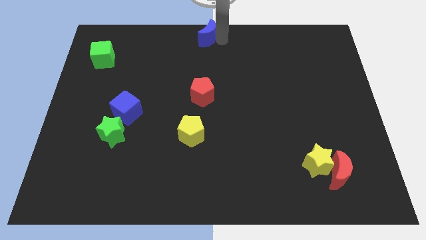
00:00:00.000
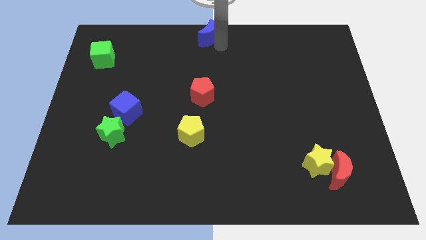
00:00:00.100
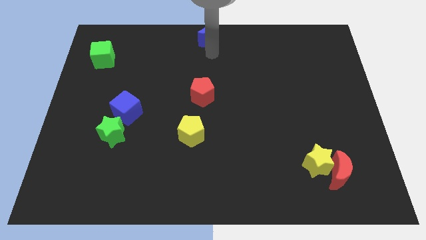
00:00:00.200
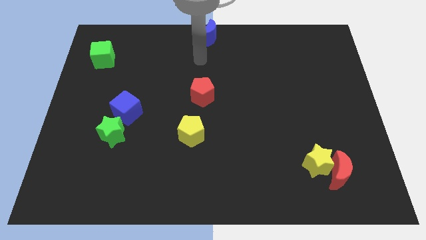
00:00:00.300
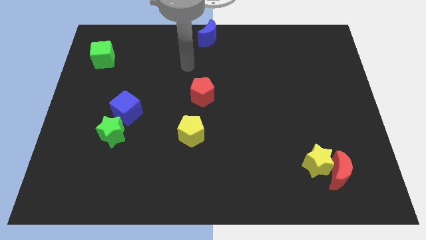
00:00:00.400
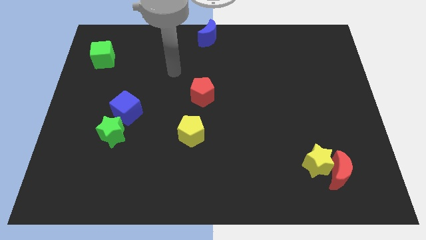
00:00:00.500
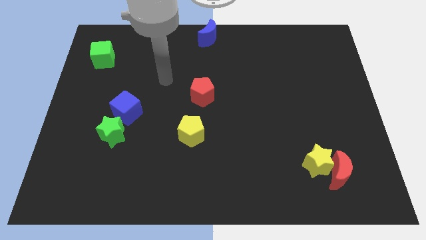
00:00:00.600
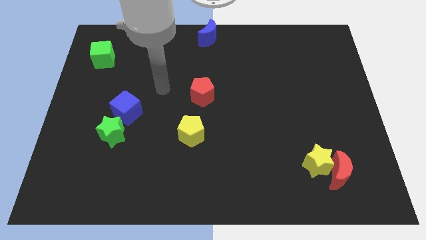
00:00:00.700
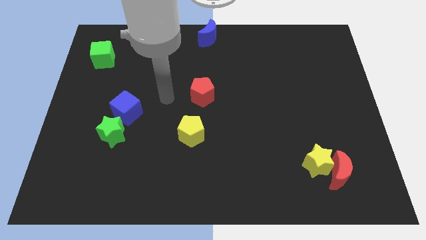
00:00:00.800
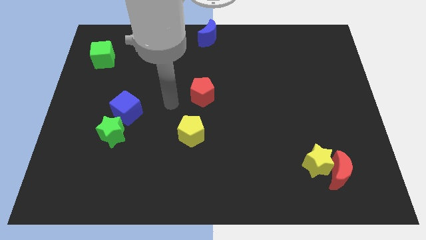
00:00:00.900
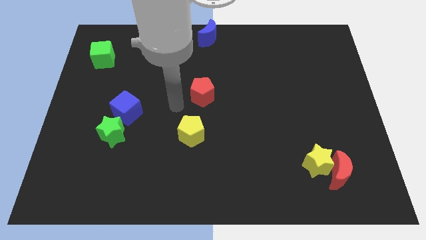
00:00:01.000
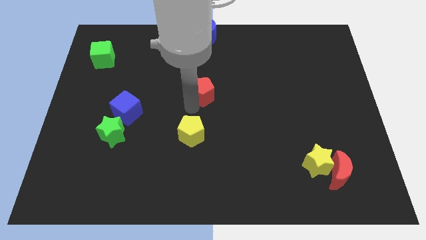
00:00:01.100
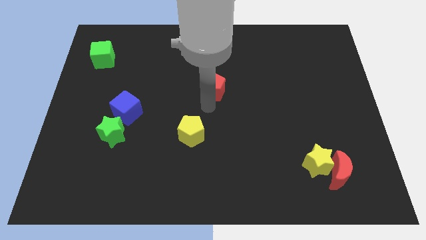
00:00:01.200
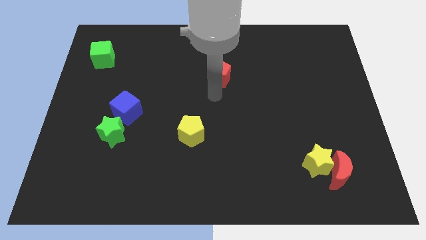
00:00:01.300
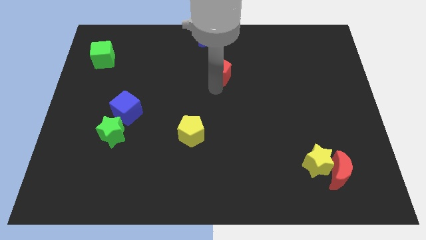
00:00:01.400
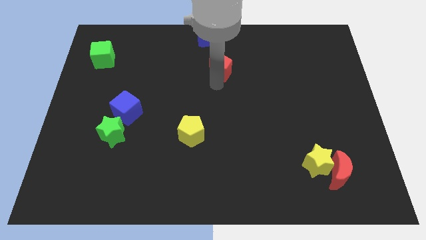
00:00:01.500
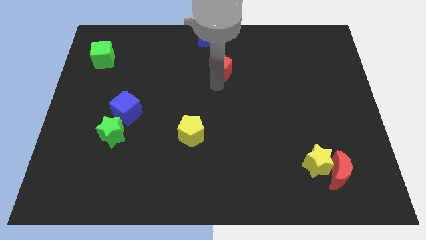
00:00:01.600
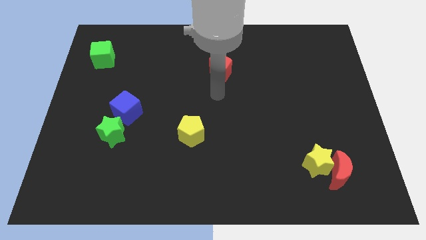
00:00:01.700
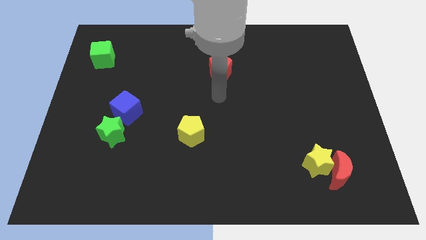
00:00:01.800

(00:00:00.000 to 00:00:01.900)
slide the red pentagon away from the yellow pentagon

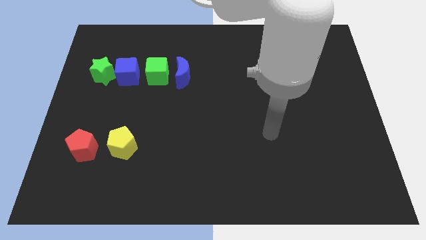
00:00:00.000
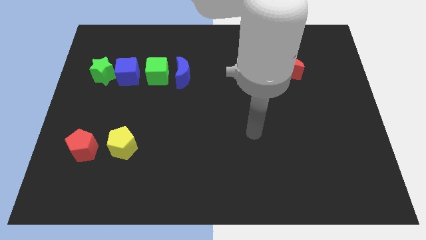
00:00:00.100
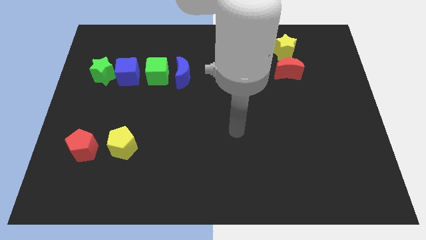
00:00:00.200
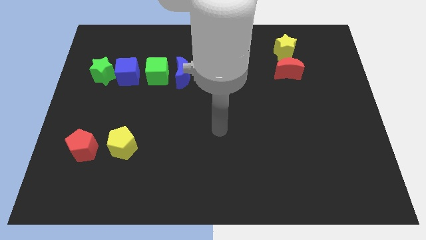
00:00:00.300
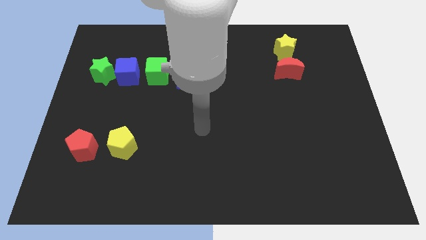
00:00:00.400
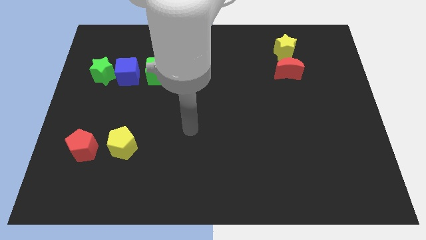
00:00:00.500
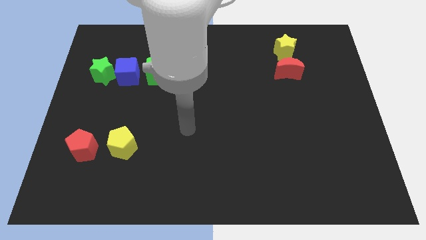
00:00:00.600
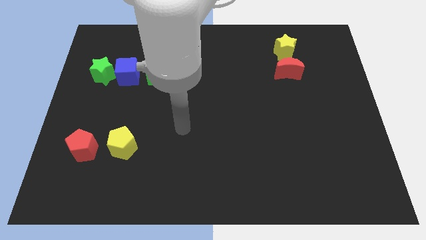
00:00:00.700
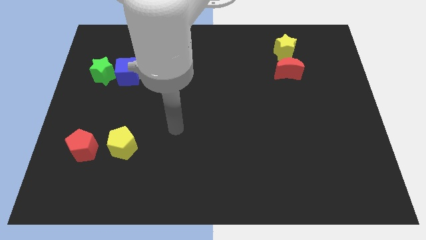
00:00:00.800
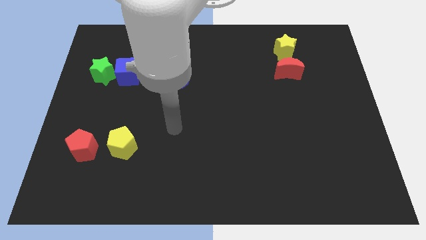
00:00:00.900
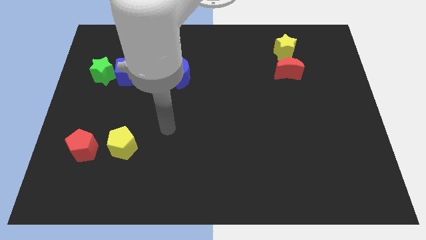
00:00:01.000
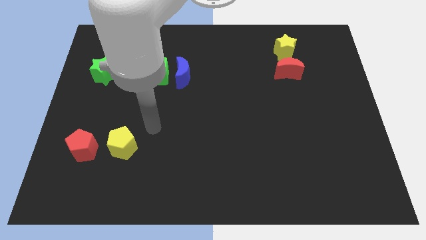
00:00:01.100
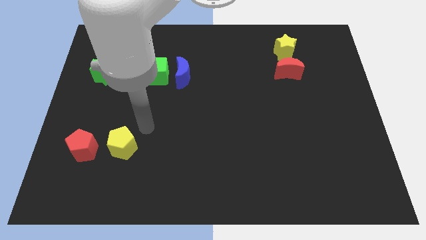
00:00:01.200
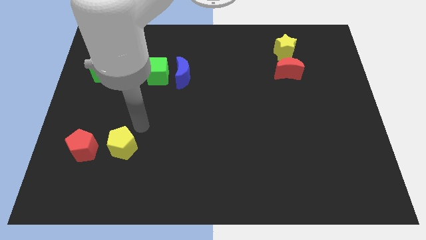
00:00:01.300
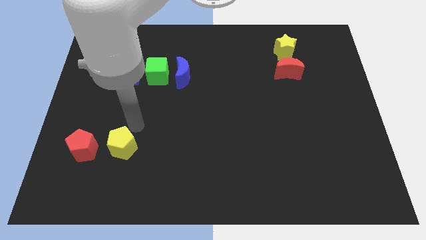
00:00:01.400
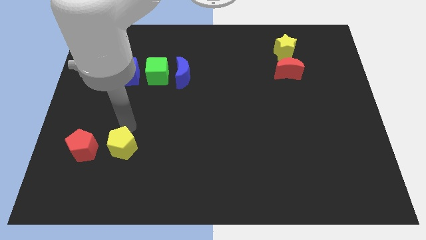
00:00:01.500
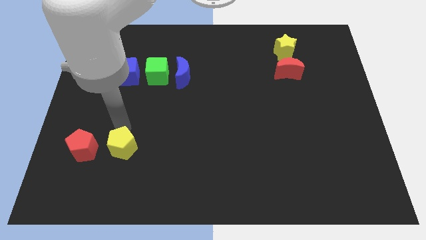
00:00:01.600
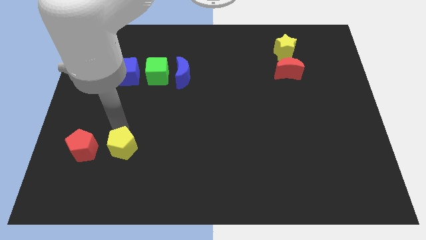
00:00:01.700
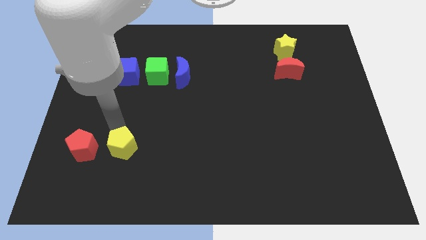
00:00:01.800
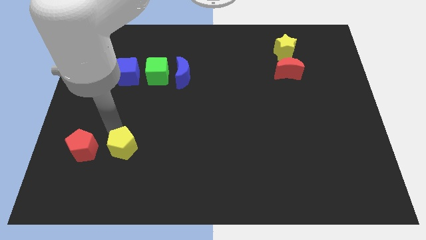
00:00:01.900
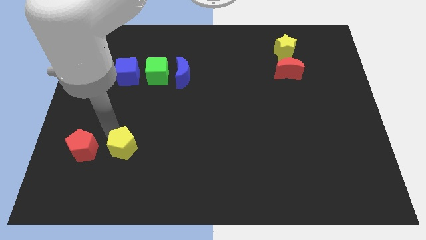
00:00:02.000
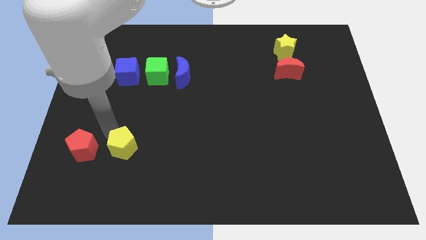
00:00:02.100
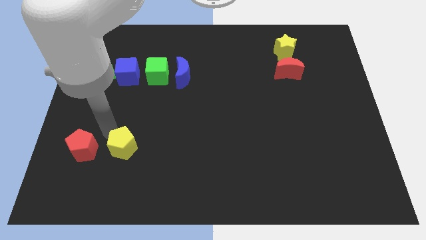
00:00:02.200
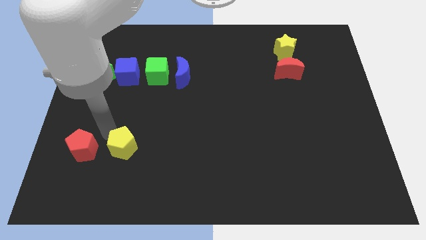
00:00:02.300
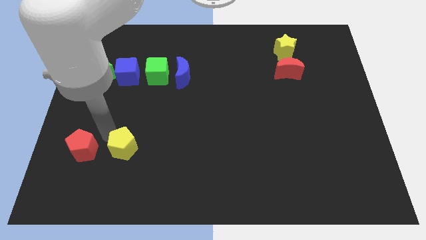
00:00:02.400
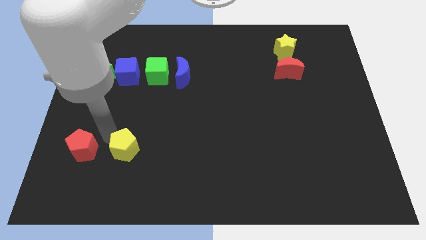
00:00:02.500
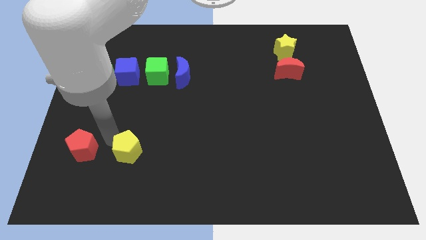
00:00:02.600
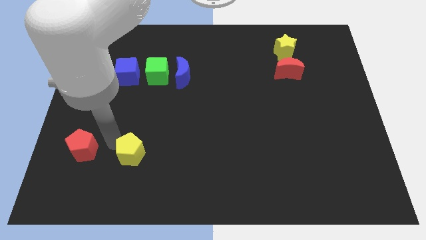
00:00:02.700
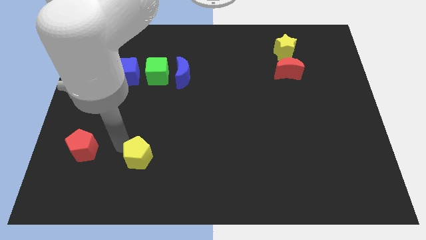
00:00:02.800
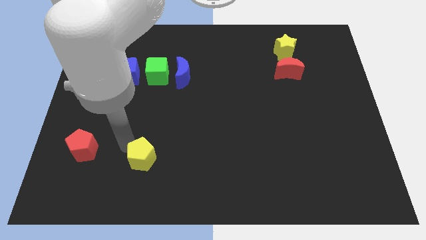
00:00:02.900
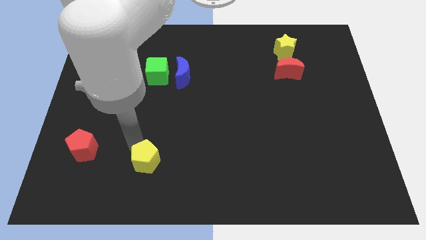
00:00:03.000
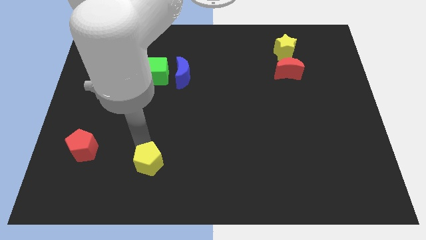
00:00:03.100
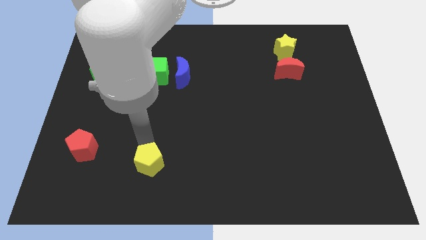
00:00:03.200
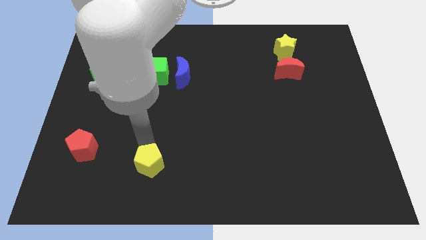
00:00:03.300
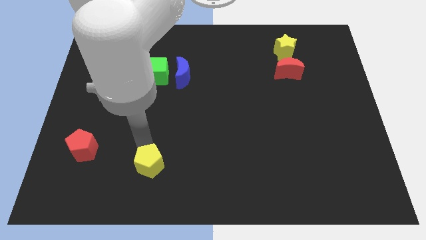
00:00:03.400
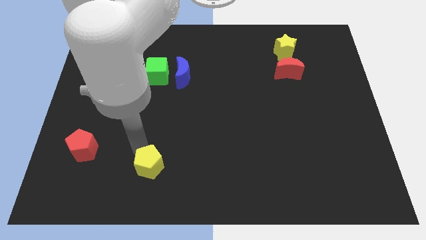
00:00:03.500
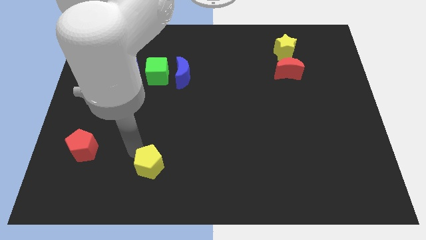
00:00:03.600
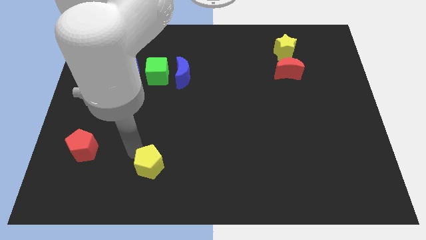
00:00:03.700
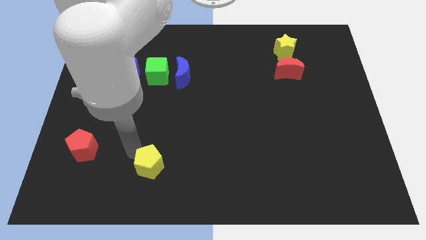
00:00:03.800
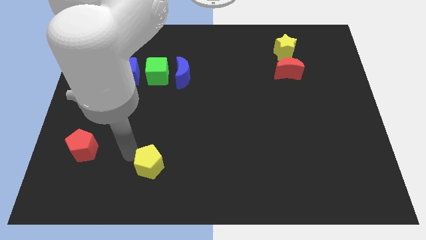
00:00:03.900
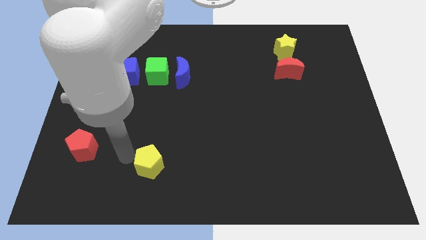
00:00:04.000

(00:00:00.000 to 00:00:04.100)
separate the yellow pentagon from the red pentagon

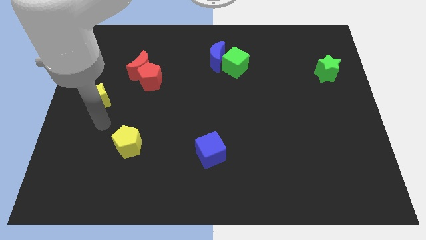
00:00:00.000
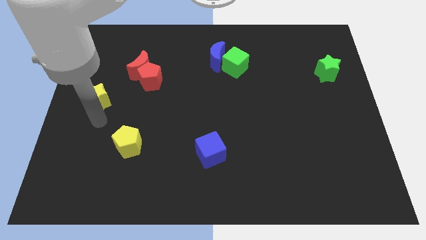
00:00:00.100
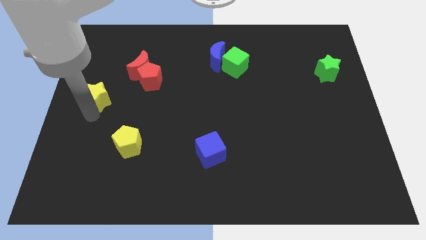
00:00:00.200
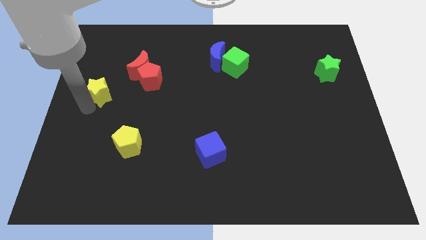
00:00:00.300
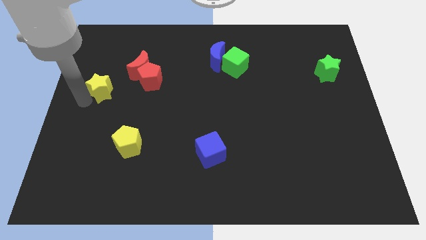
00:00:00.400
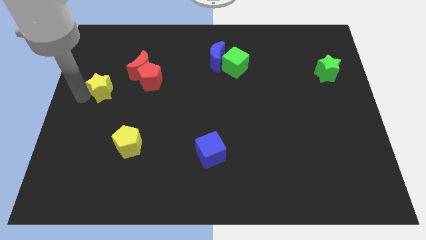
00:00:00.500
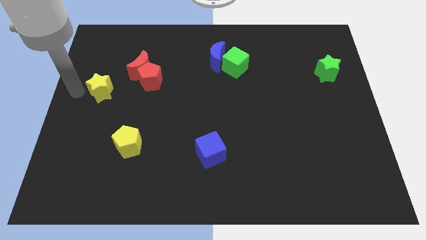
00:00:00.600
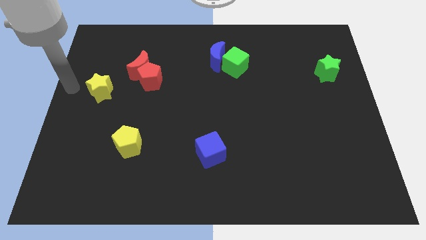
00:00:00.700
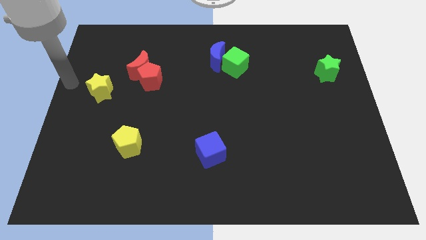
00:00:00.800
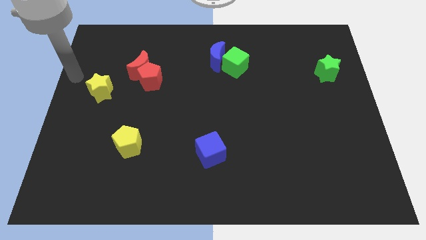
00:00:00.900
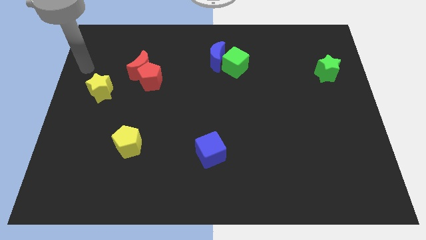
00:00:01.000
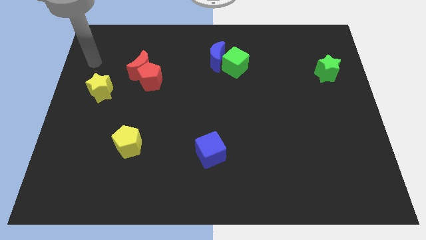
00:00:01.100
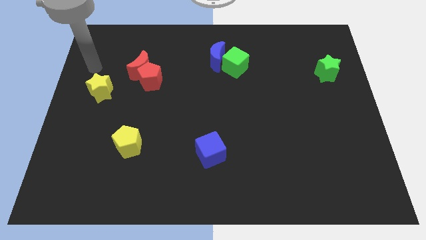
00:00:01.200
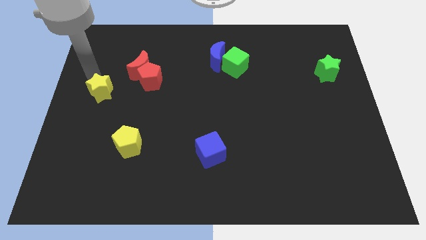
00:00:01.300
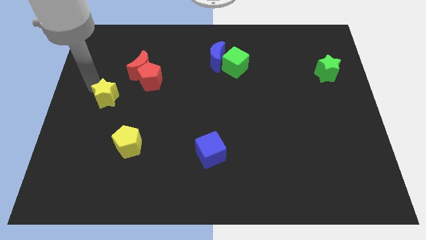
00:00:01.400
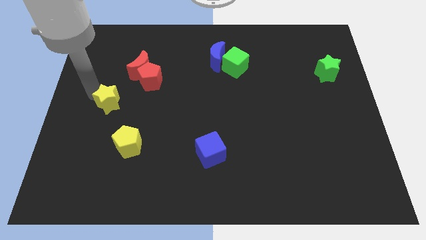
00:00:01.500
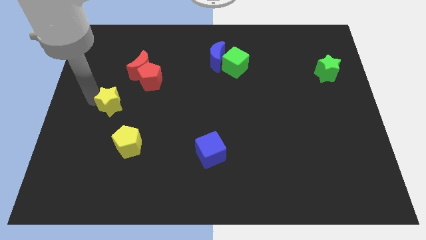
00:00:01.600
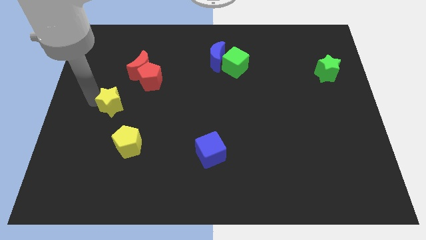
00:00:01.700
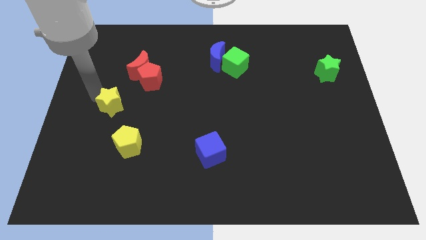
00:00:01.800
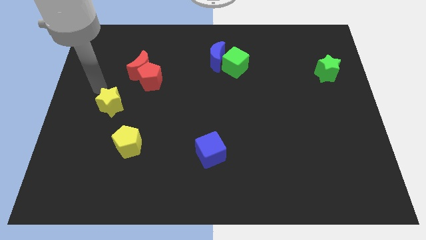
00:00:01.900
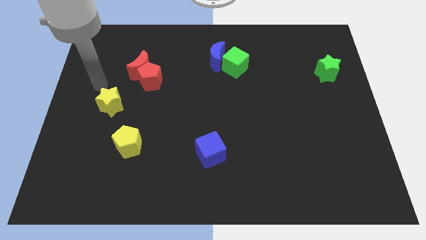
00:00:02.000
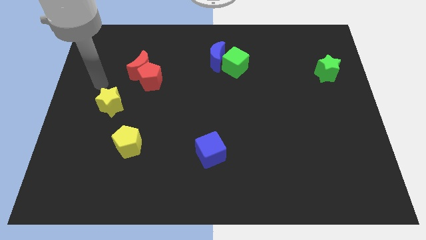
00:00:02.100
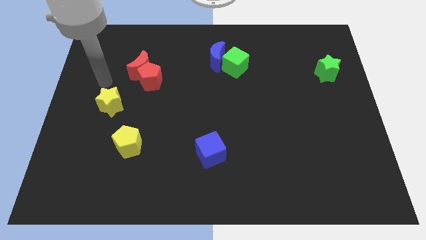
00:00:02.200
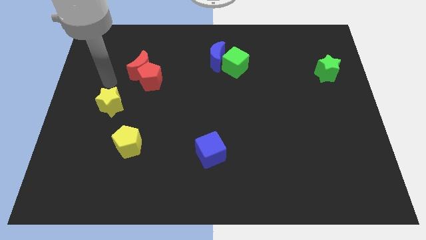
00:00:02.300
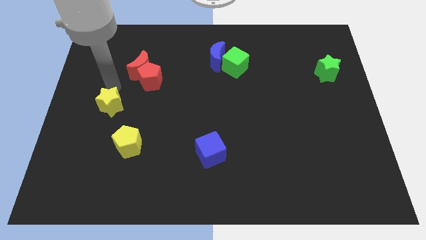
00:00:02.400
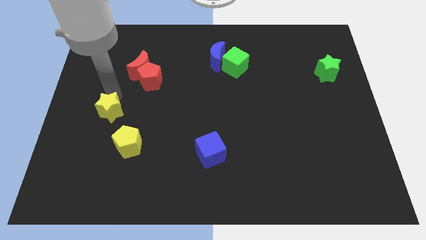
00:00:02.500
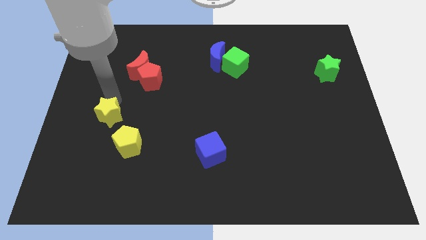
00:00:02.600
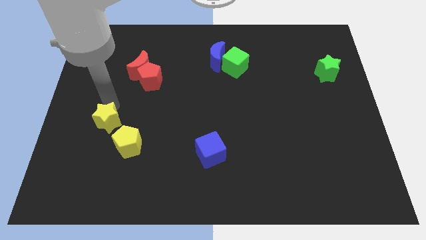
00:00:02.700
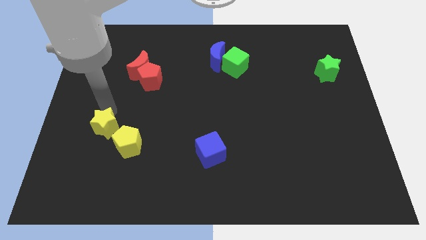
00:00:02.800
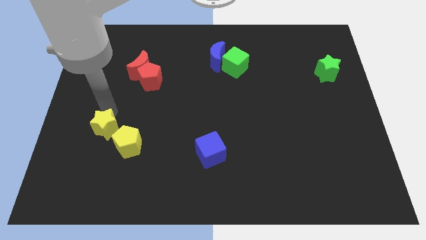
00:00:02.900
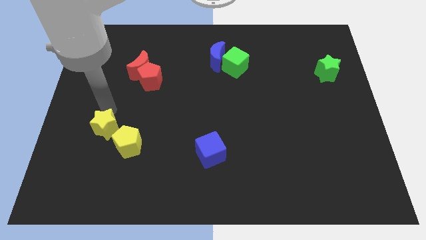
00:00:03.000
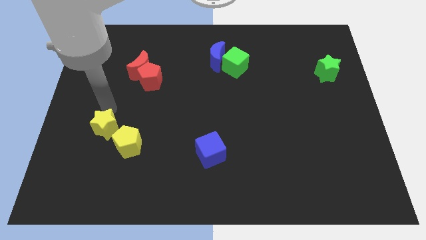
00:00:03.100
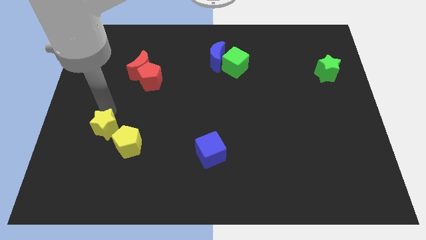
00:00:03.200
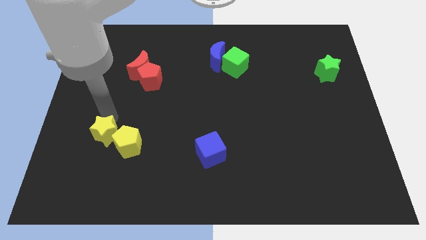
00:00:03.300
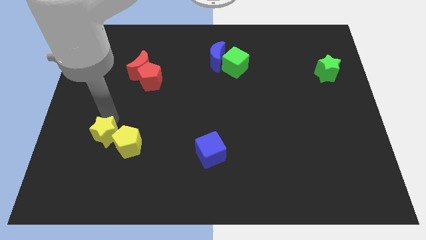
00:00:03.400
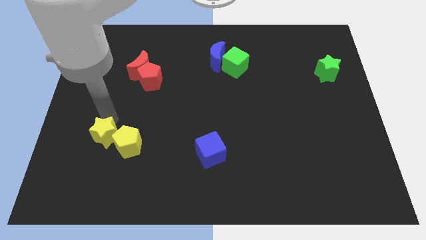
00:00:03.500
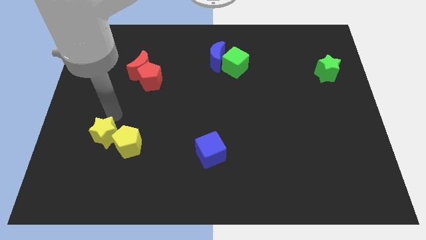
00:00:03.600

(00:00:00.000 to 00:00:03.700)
move the yellow star close to the yellow pentagon
